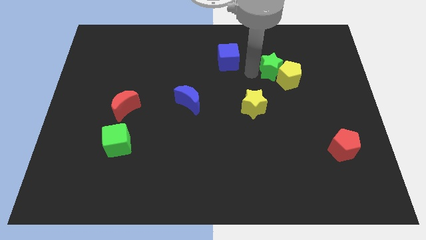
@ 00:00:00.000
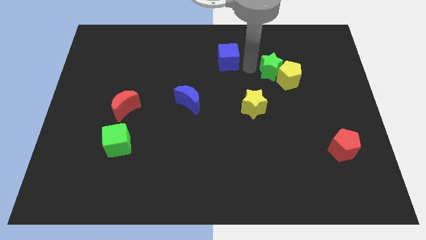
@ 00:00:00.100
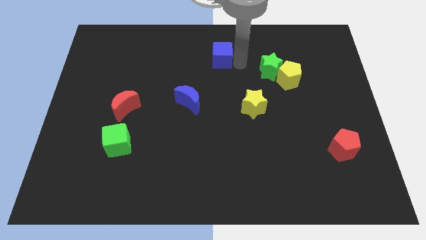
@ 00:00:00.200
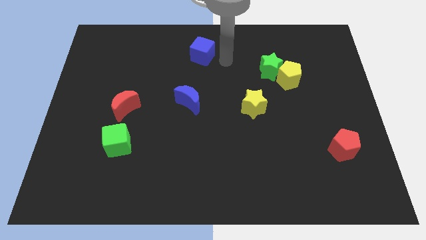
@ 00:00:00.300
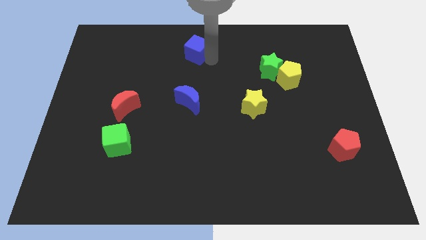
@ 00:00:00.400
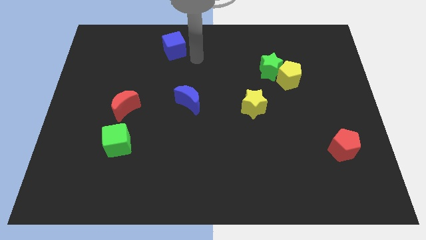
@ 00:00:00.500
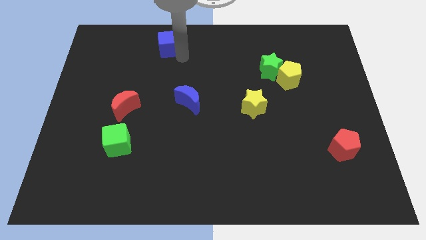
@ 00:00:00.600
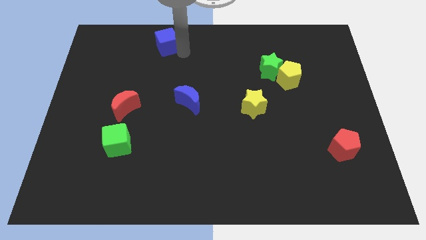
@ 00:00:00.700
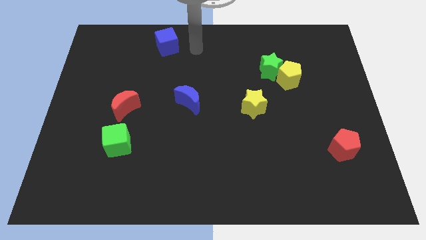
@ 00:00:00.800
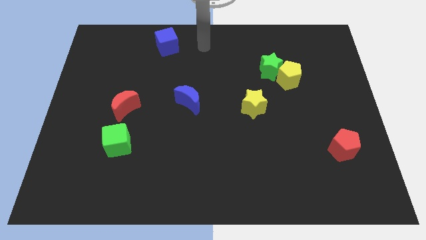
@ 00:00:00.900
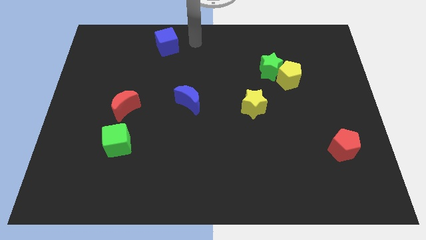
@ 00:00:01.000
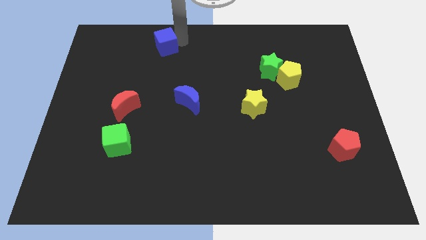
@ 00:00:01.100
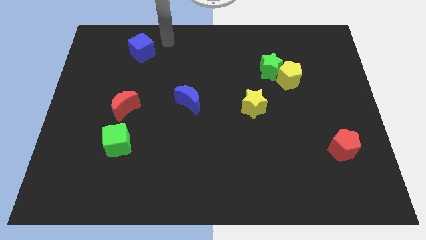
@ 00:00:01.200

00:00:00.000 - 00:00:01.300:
place the blue cube diagonally top left to the blue moon

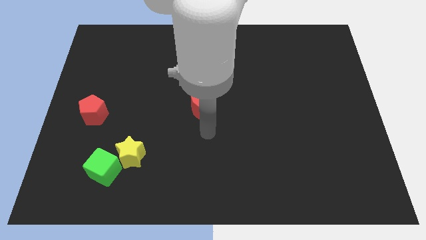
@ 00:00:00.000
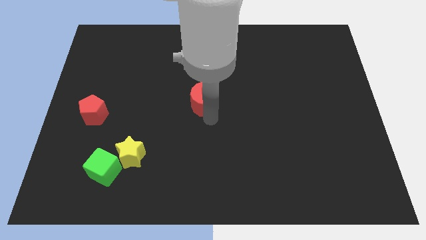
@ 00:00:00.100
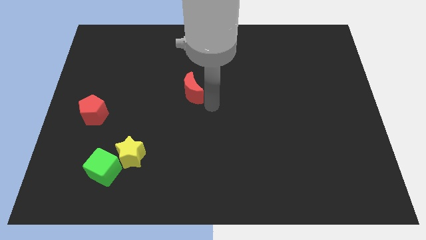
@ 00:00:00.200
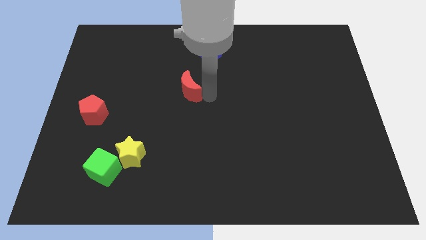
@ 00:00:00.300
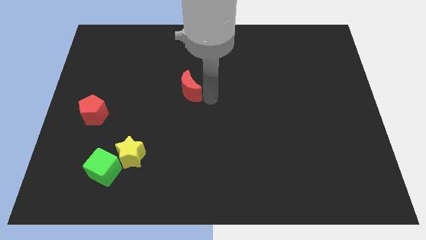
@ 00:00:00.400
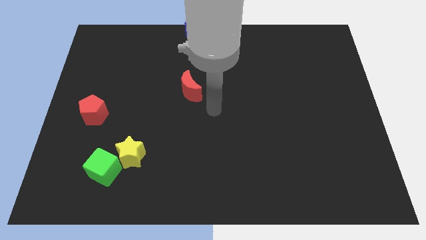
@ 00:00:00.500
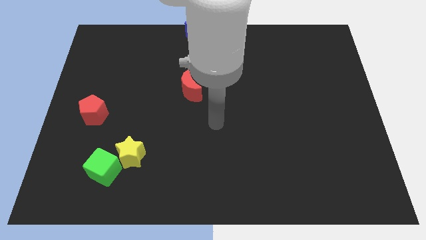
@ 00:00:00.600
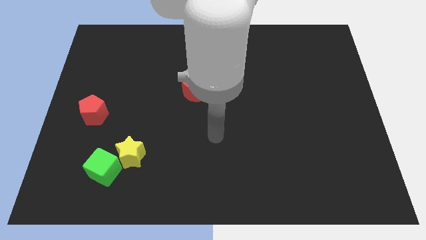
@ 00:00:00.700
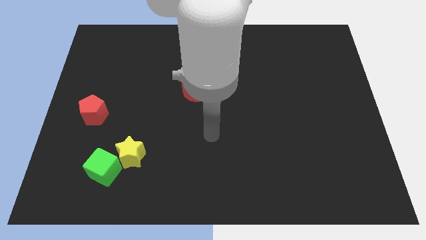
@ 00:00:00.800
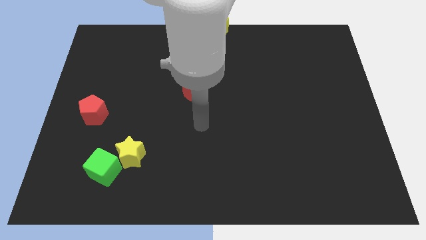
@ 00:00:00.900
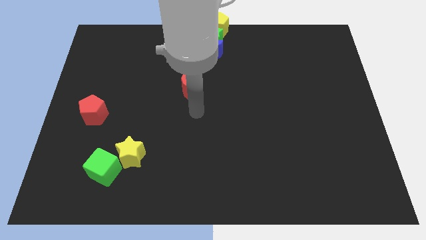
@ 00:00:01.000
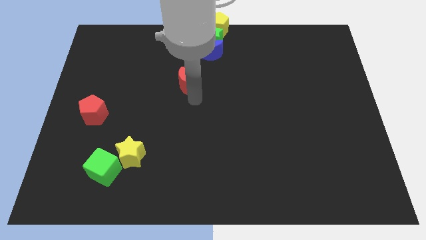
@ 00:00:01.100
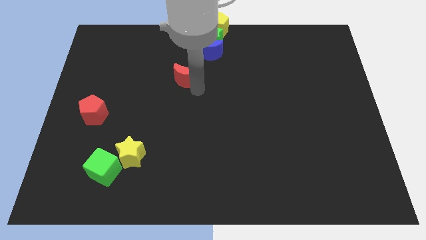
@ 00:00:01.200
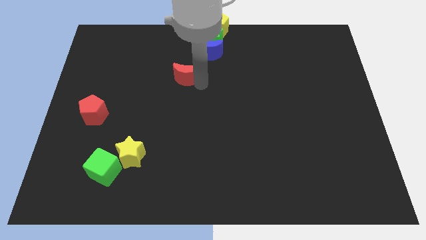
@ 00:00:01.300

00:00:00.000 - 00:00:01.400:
place red moon to the bottom left of blue moon

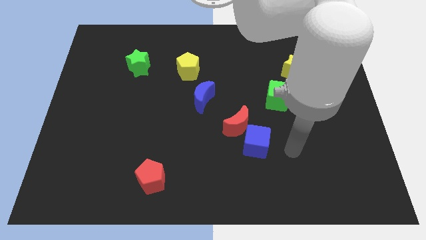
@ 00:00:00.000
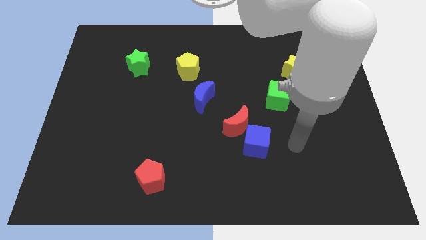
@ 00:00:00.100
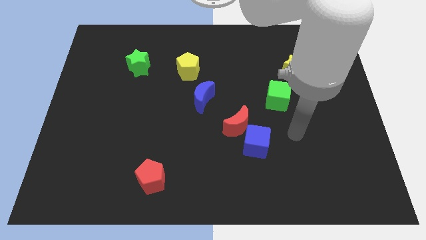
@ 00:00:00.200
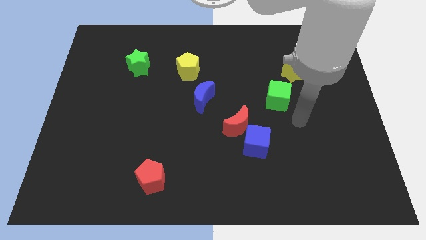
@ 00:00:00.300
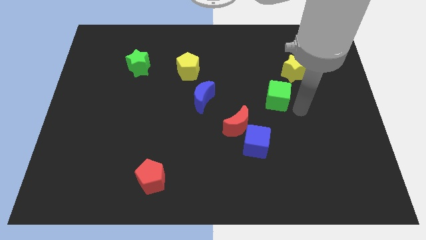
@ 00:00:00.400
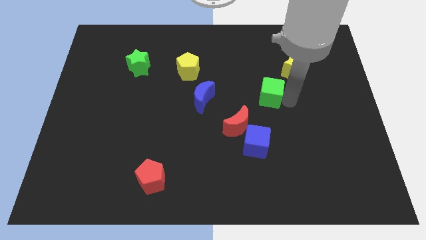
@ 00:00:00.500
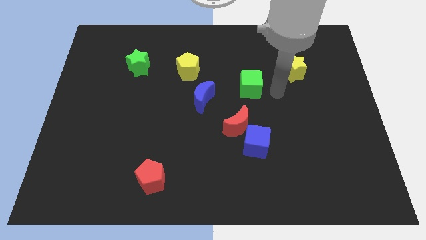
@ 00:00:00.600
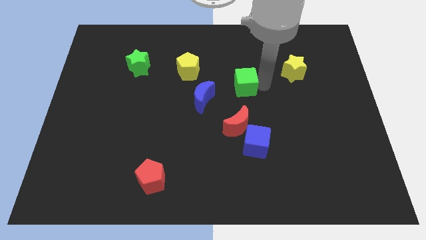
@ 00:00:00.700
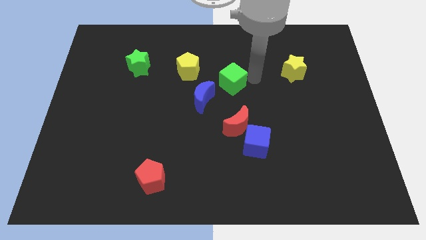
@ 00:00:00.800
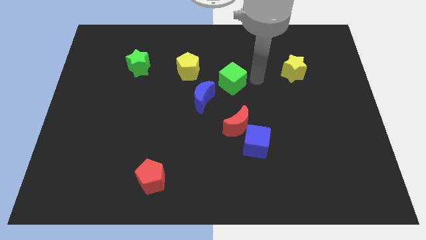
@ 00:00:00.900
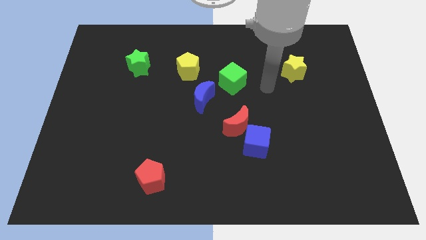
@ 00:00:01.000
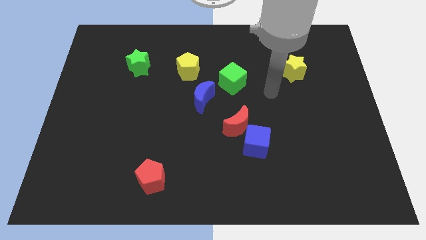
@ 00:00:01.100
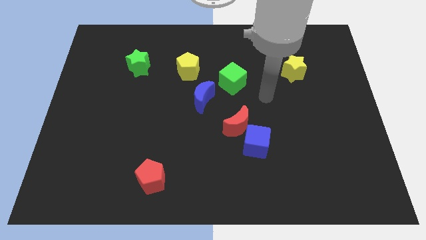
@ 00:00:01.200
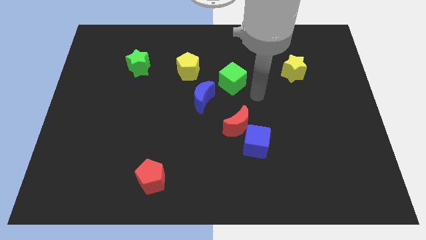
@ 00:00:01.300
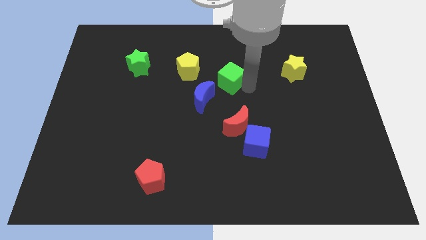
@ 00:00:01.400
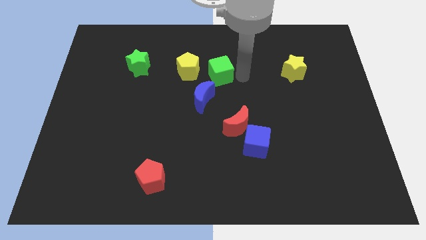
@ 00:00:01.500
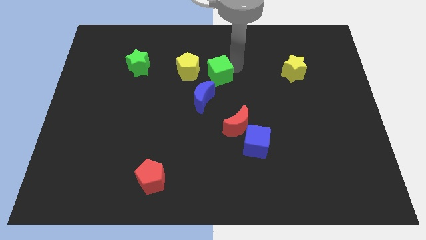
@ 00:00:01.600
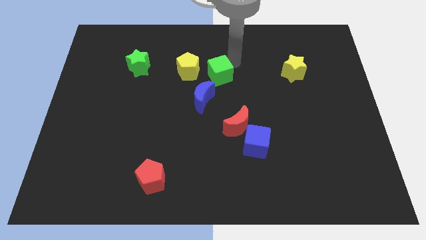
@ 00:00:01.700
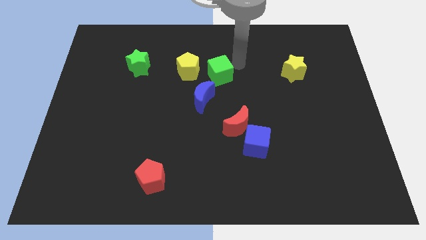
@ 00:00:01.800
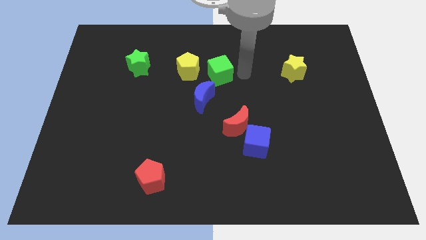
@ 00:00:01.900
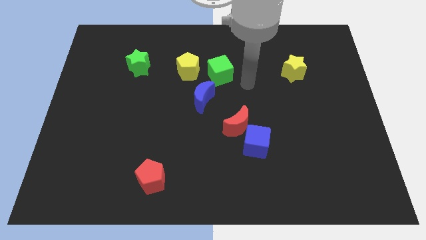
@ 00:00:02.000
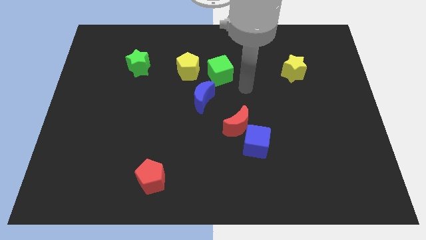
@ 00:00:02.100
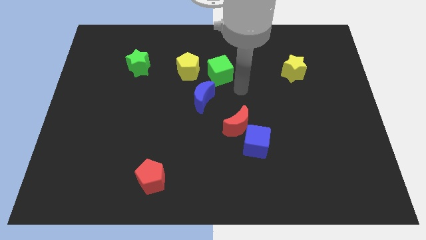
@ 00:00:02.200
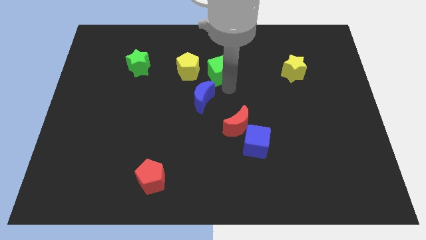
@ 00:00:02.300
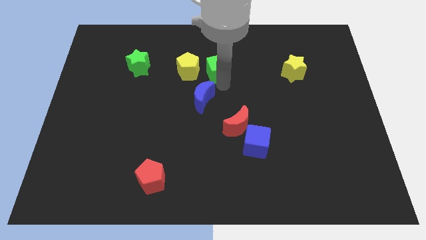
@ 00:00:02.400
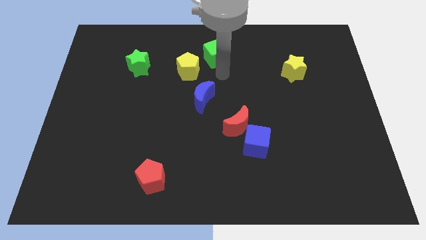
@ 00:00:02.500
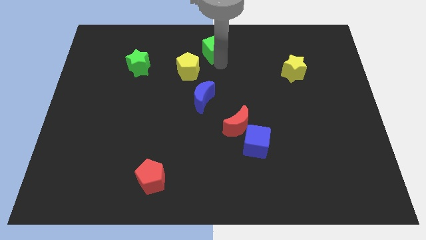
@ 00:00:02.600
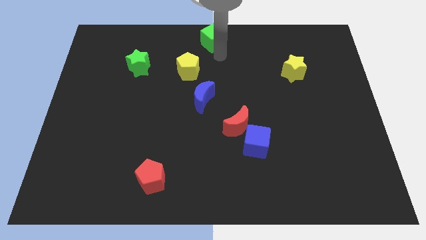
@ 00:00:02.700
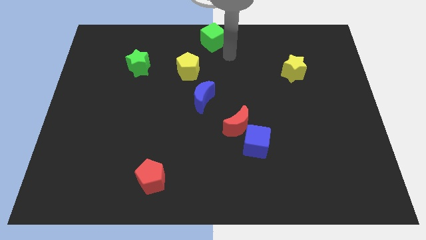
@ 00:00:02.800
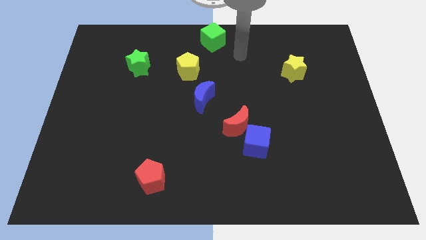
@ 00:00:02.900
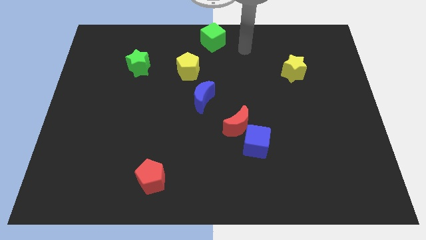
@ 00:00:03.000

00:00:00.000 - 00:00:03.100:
place the green cube towards the top centre of the board

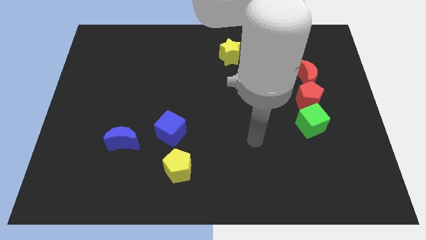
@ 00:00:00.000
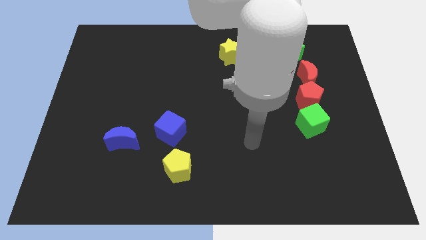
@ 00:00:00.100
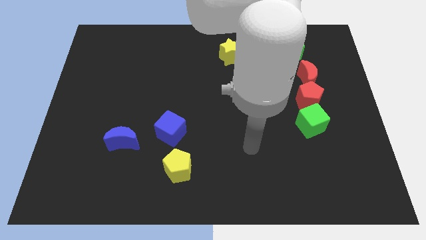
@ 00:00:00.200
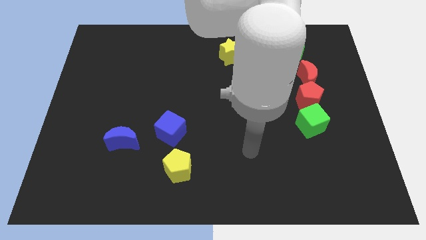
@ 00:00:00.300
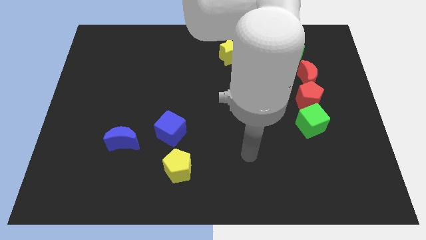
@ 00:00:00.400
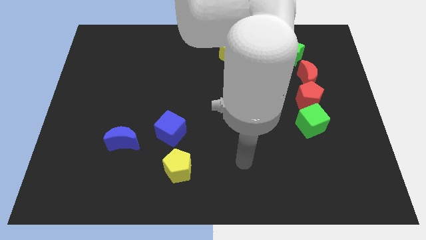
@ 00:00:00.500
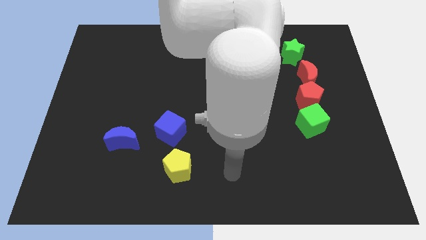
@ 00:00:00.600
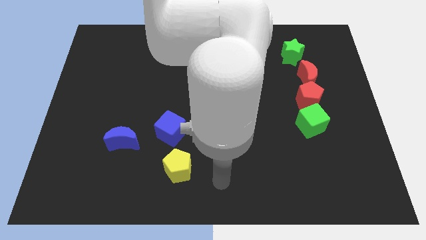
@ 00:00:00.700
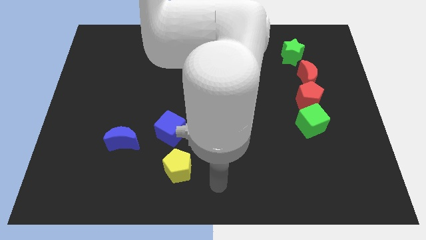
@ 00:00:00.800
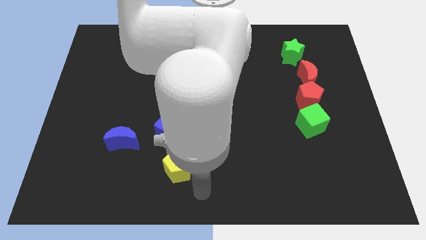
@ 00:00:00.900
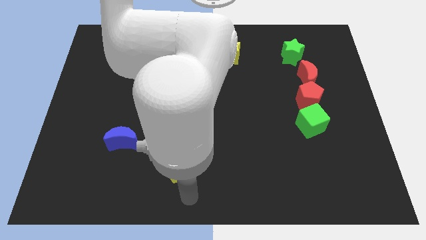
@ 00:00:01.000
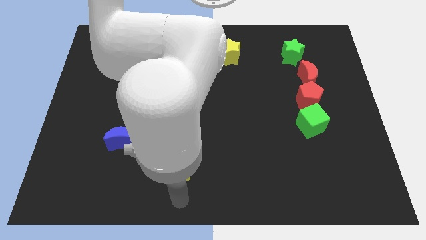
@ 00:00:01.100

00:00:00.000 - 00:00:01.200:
move the arm to the bottom of the yellow pentagon

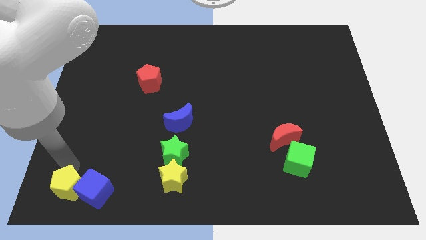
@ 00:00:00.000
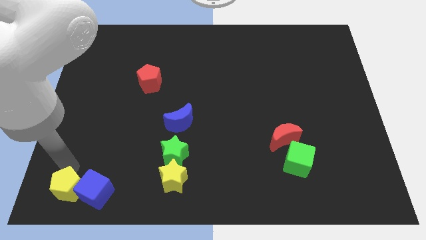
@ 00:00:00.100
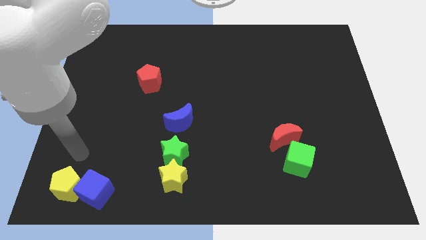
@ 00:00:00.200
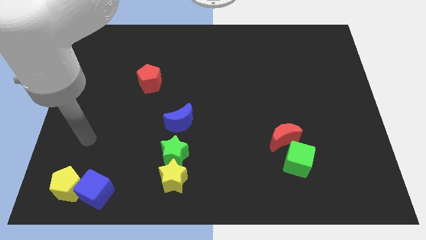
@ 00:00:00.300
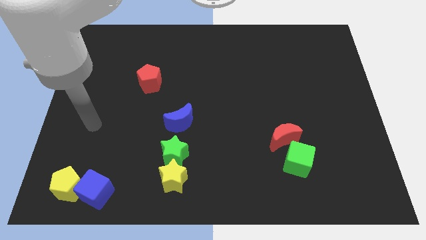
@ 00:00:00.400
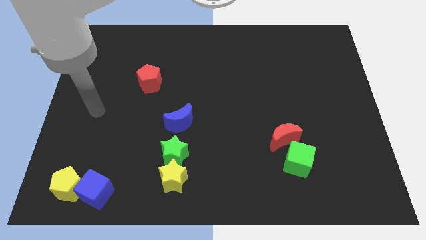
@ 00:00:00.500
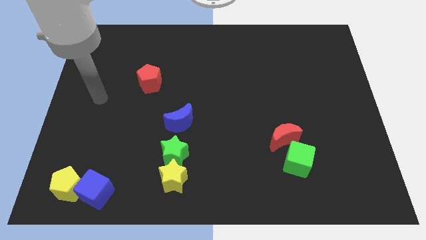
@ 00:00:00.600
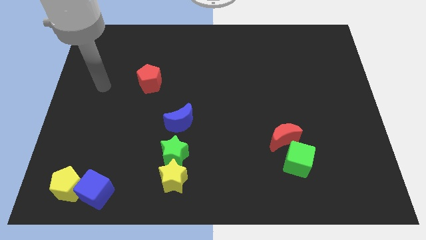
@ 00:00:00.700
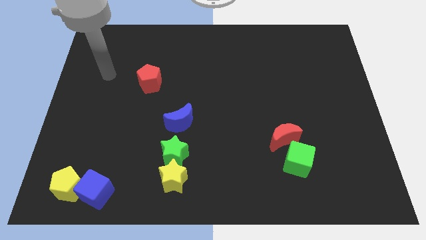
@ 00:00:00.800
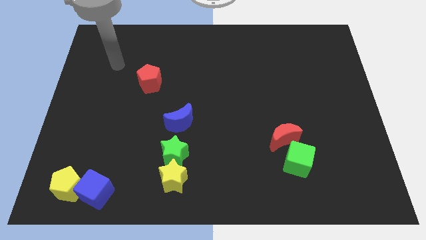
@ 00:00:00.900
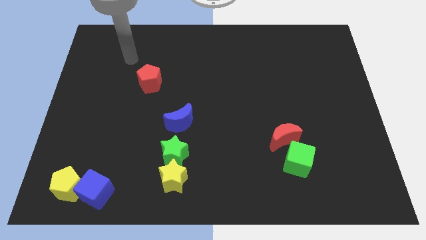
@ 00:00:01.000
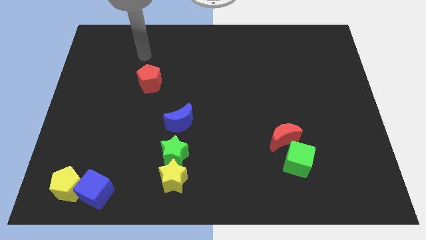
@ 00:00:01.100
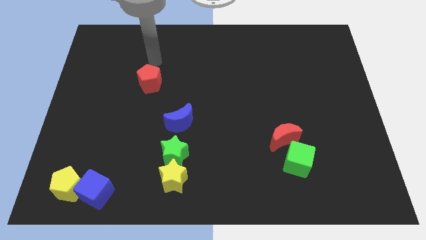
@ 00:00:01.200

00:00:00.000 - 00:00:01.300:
move arm away from yellow pentagon

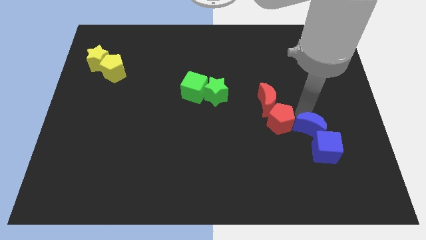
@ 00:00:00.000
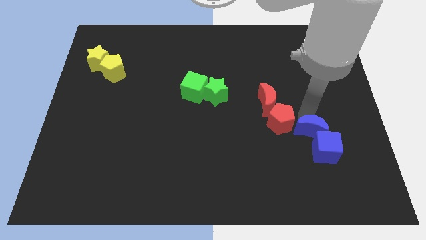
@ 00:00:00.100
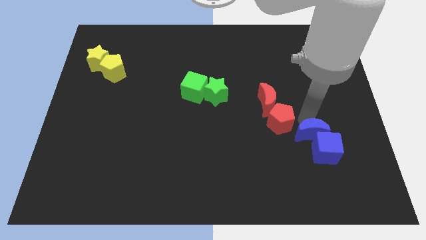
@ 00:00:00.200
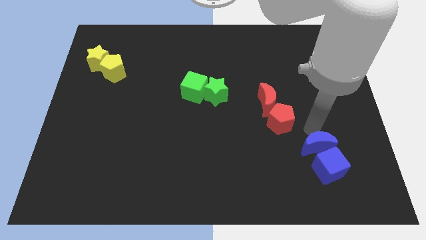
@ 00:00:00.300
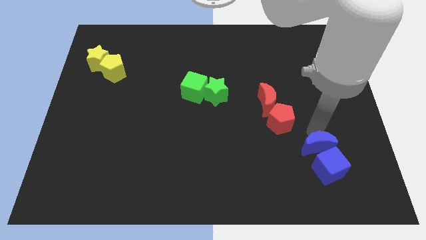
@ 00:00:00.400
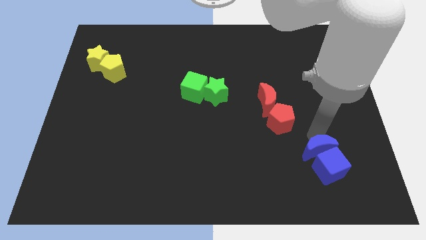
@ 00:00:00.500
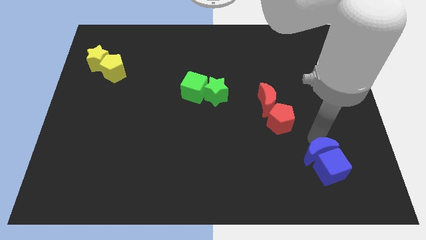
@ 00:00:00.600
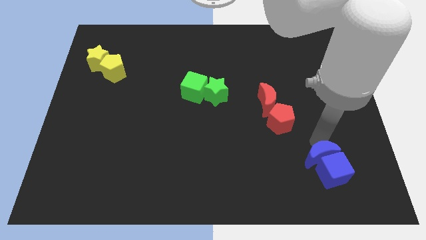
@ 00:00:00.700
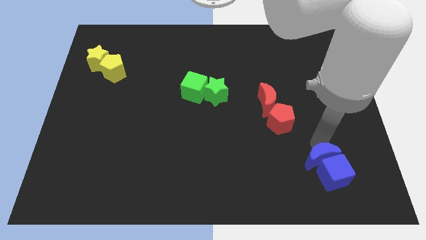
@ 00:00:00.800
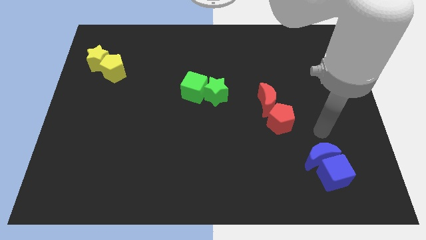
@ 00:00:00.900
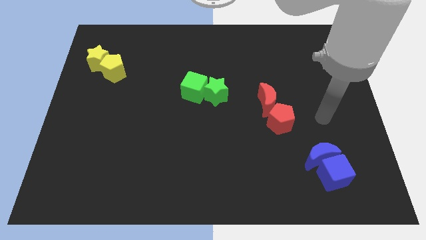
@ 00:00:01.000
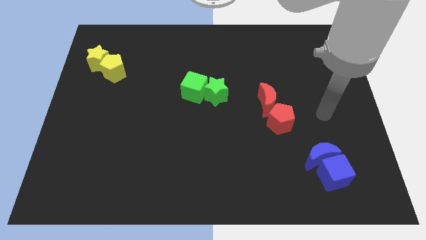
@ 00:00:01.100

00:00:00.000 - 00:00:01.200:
move the blue blocks slightly towards the bottom right
